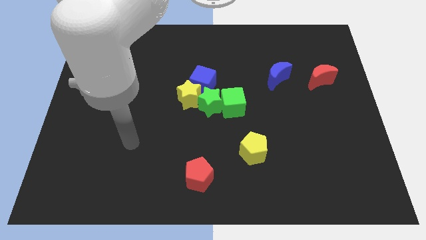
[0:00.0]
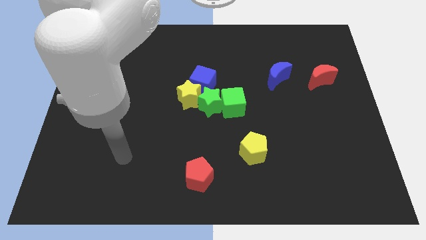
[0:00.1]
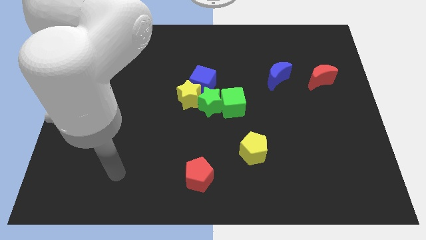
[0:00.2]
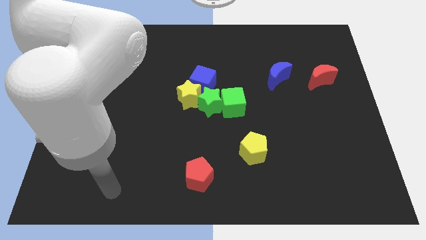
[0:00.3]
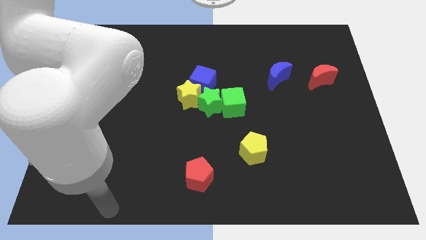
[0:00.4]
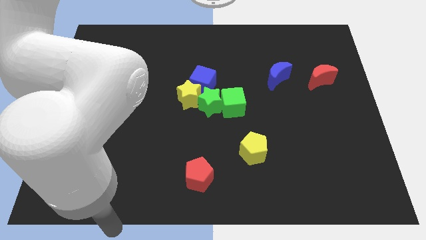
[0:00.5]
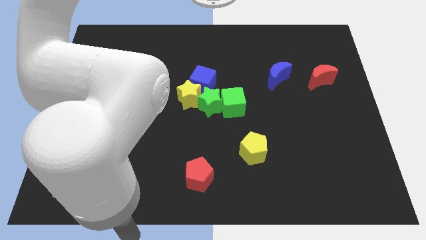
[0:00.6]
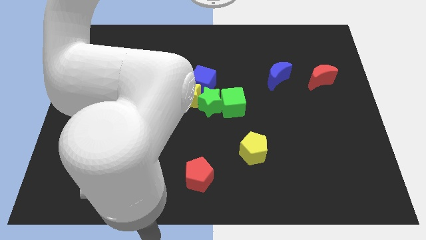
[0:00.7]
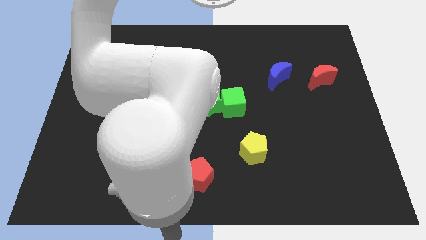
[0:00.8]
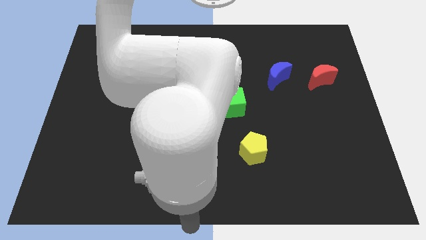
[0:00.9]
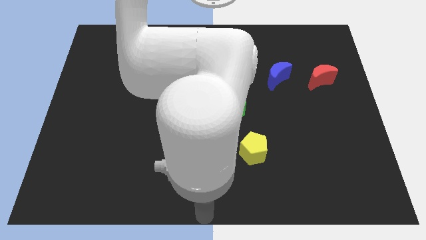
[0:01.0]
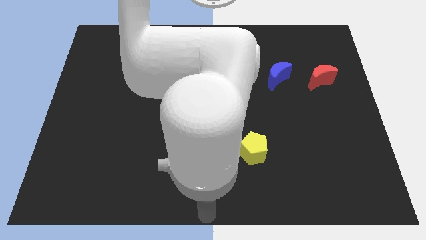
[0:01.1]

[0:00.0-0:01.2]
place your arm at the bottom center of the board

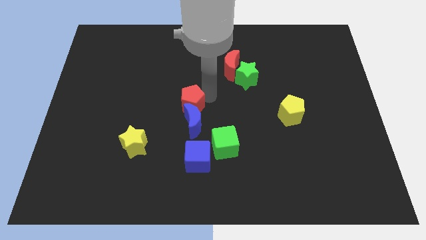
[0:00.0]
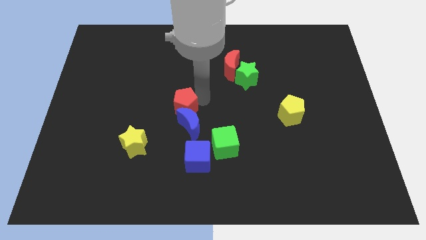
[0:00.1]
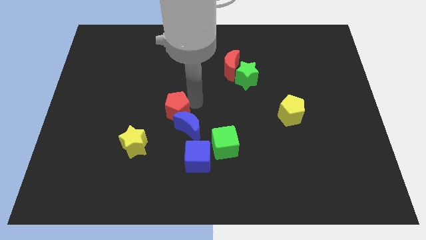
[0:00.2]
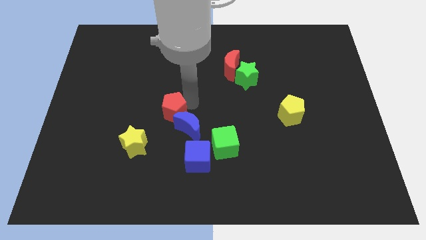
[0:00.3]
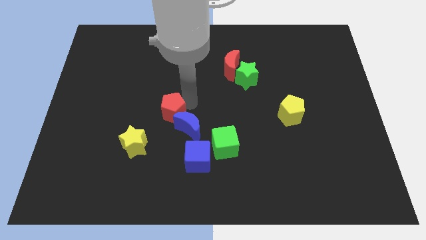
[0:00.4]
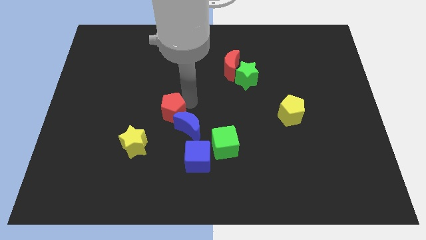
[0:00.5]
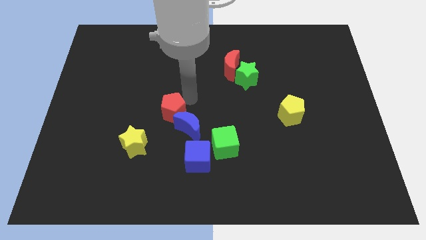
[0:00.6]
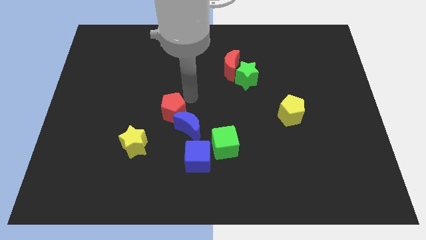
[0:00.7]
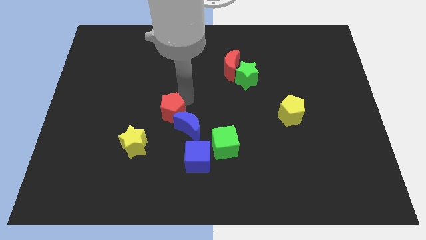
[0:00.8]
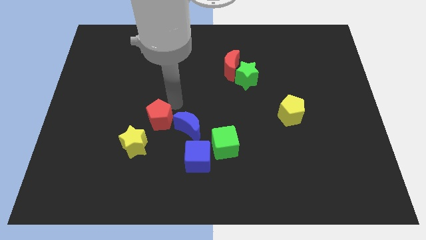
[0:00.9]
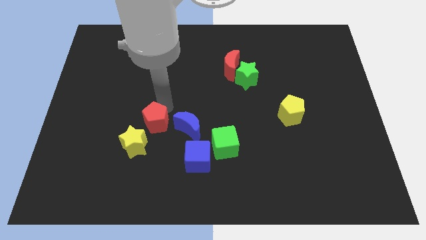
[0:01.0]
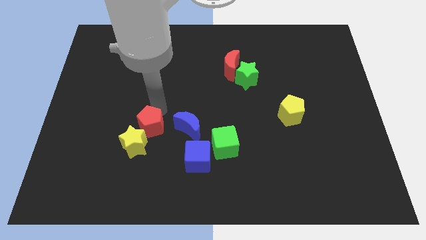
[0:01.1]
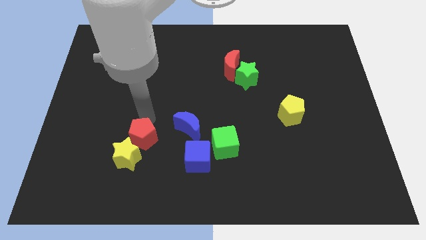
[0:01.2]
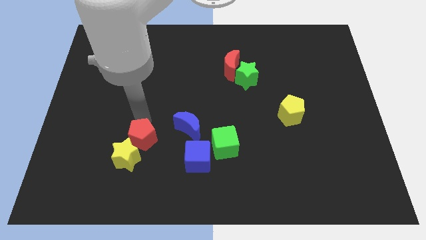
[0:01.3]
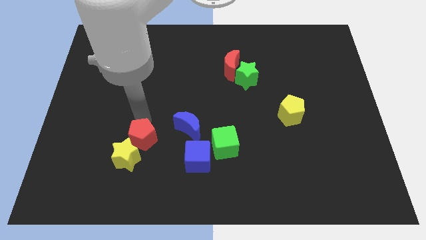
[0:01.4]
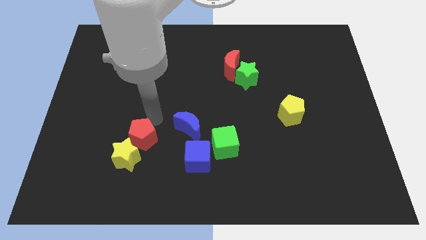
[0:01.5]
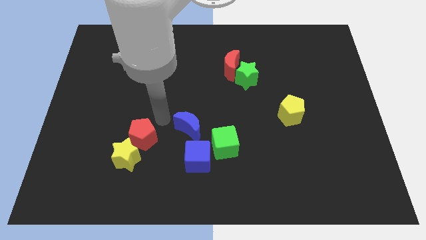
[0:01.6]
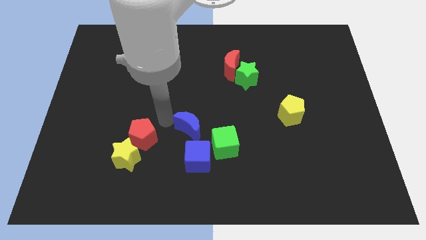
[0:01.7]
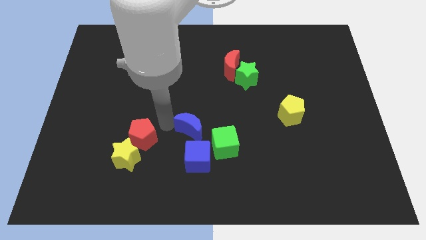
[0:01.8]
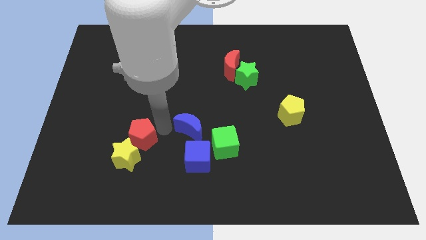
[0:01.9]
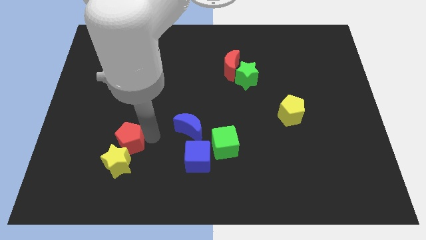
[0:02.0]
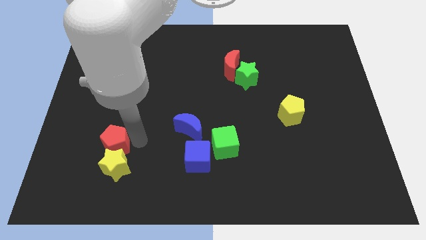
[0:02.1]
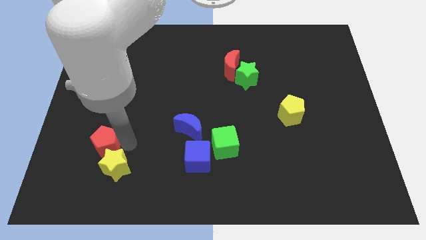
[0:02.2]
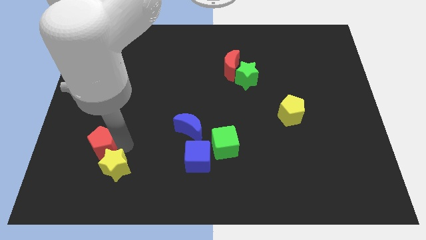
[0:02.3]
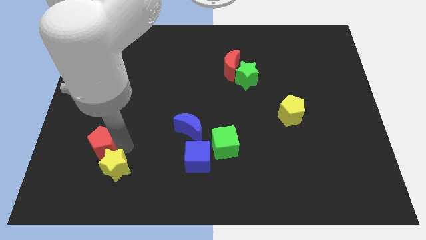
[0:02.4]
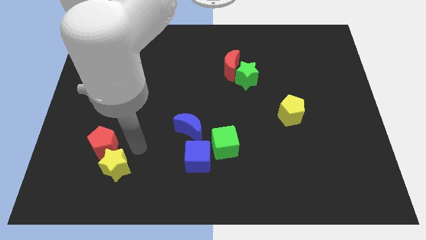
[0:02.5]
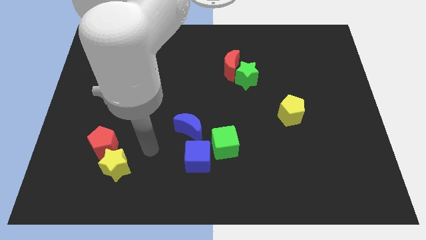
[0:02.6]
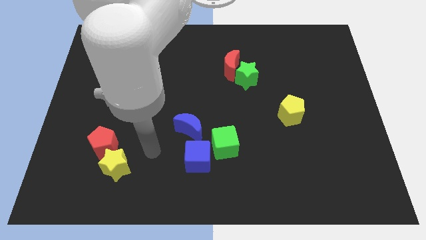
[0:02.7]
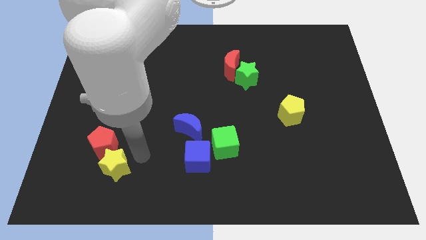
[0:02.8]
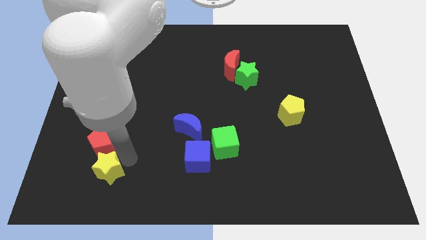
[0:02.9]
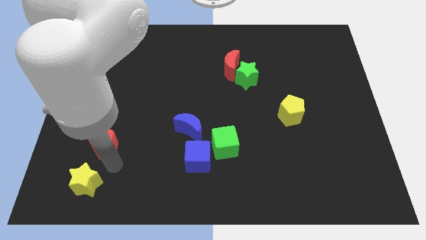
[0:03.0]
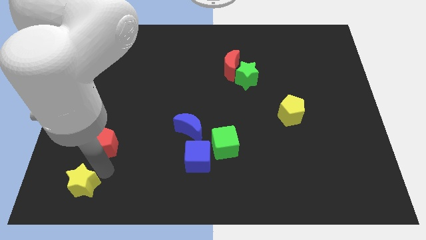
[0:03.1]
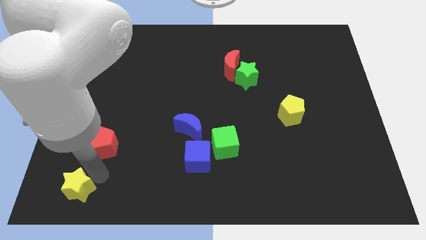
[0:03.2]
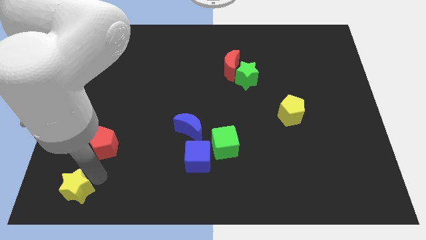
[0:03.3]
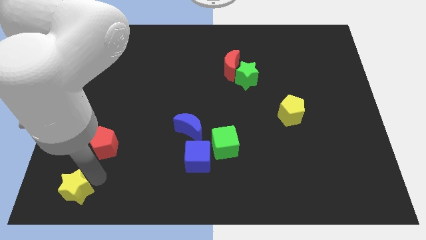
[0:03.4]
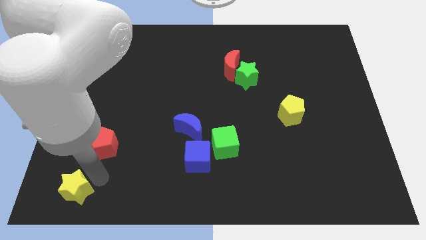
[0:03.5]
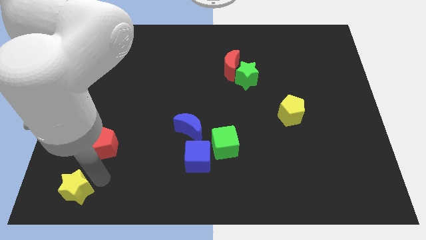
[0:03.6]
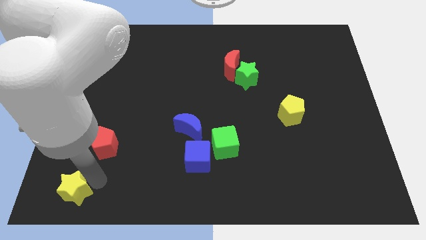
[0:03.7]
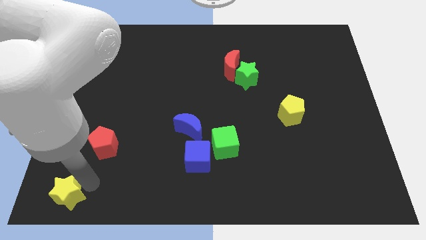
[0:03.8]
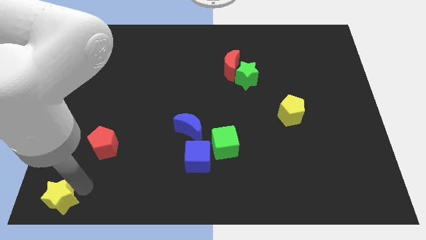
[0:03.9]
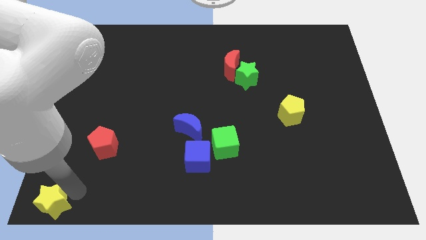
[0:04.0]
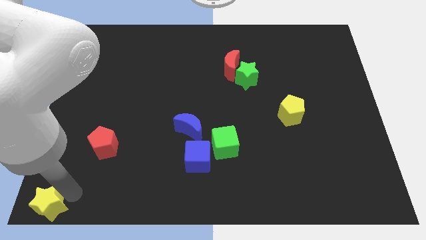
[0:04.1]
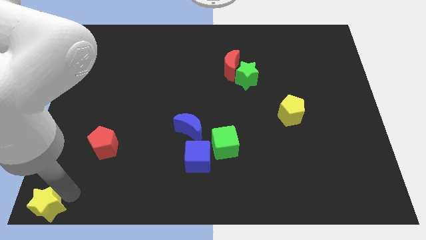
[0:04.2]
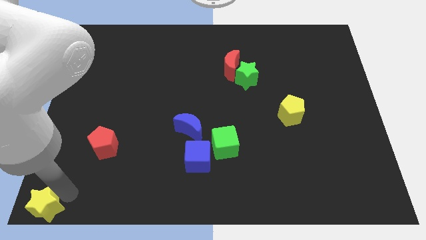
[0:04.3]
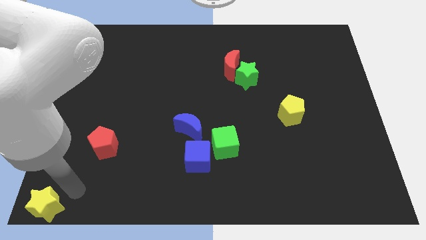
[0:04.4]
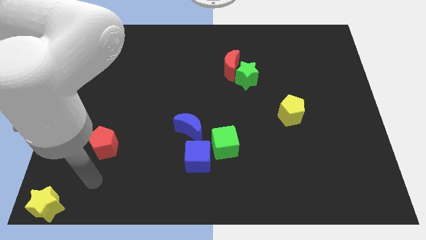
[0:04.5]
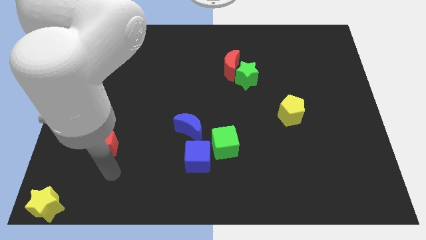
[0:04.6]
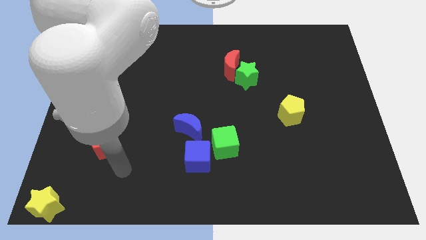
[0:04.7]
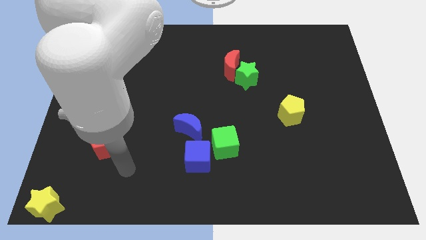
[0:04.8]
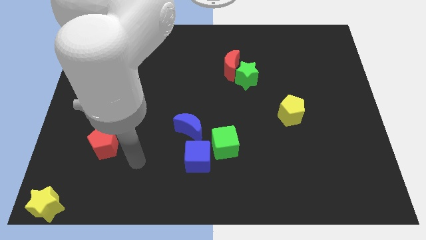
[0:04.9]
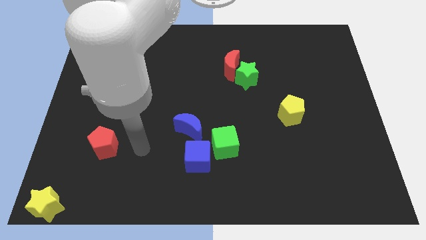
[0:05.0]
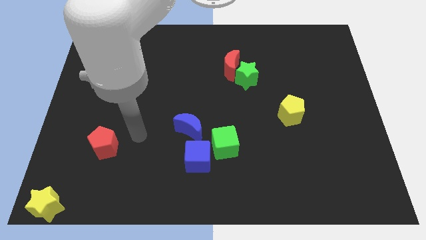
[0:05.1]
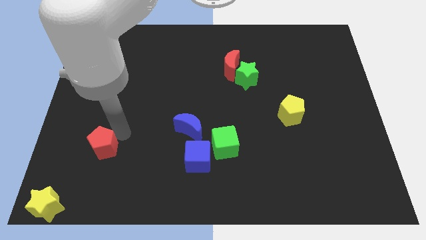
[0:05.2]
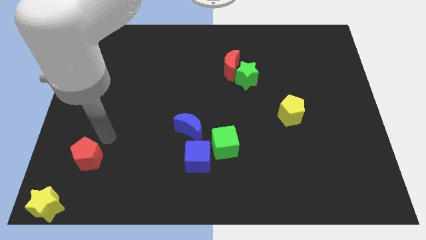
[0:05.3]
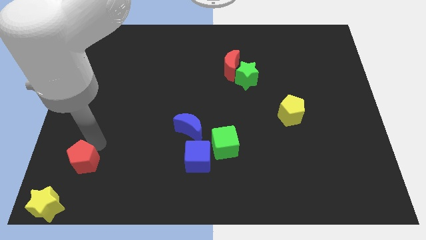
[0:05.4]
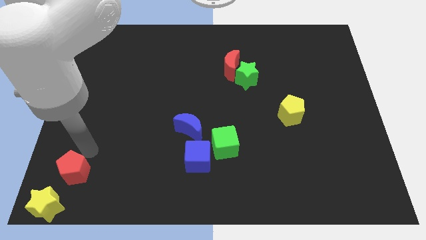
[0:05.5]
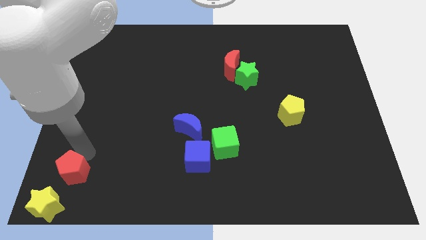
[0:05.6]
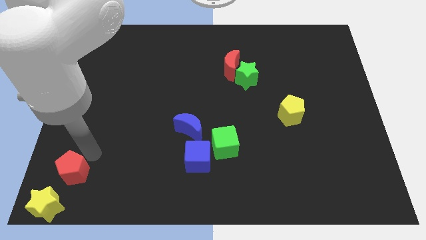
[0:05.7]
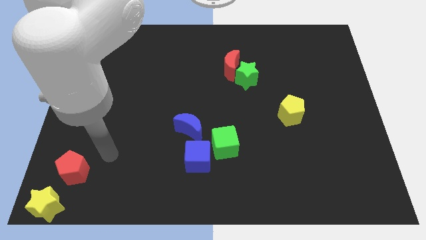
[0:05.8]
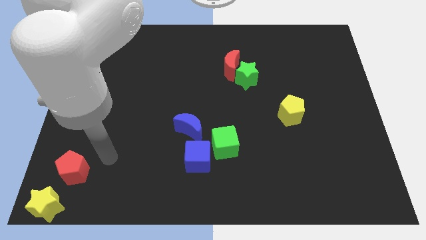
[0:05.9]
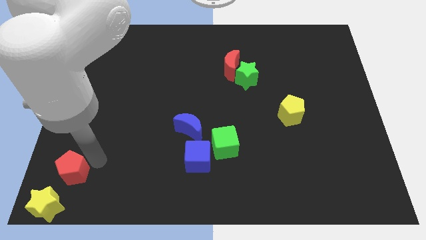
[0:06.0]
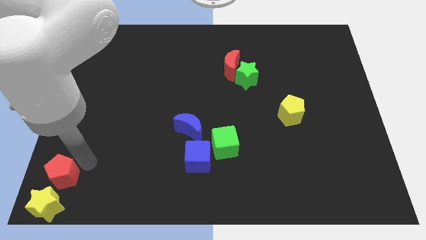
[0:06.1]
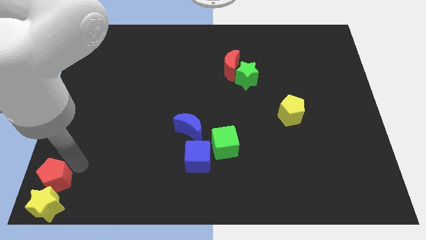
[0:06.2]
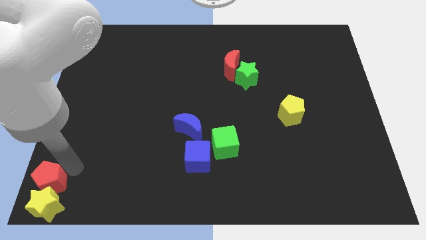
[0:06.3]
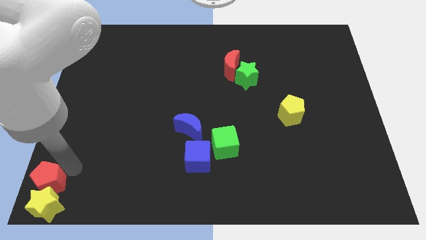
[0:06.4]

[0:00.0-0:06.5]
slide the yellow star snd the red pentagon at the bottom left of the table

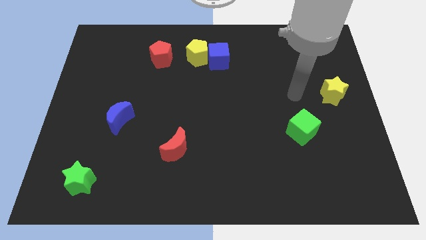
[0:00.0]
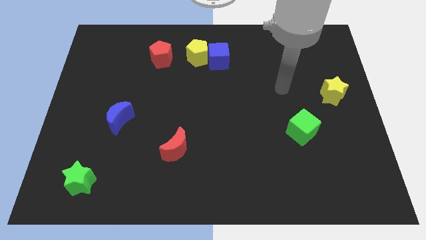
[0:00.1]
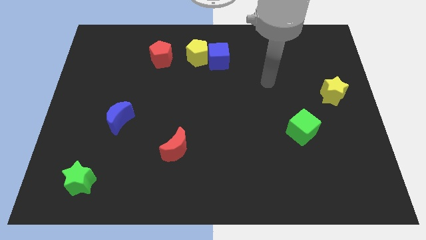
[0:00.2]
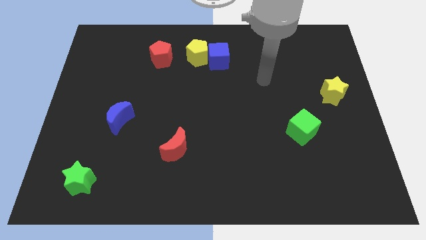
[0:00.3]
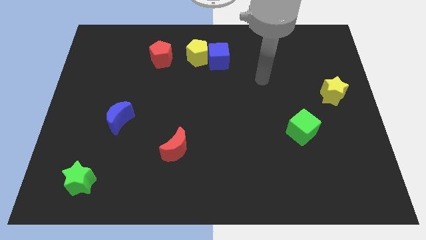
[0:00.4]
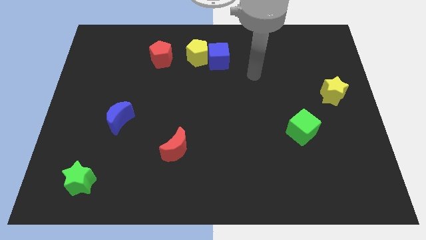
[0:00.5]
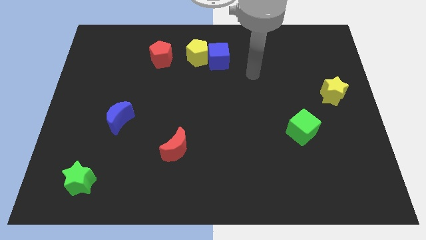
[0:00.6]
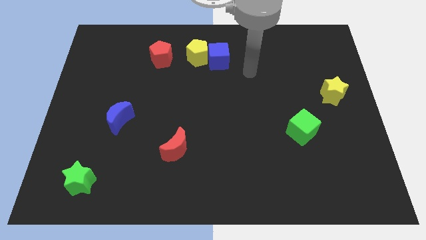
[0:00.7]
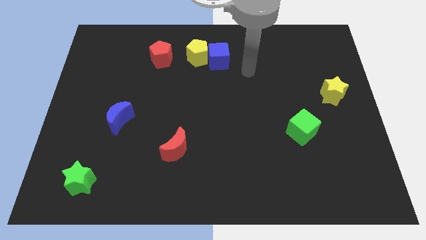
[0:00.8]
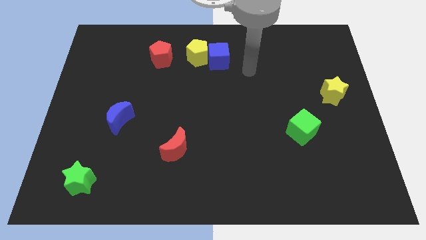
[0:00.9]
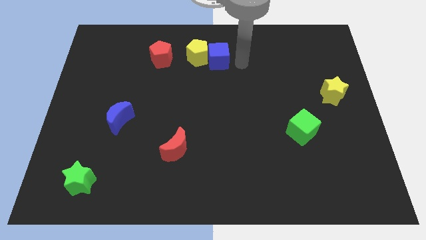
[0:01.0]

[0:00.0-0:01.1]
move your hand to the right of blue cube

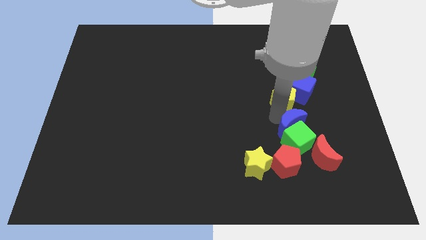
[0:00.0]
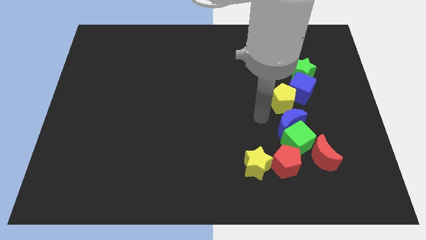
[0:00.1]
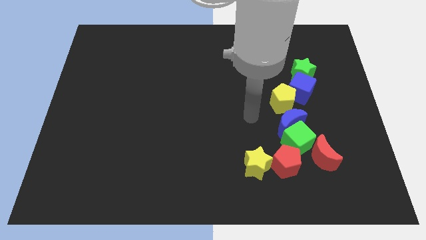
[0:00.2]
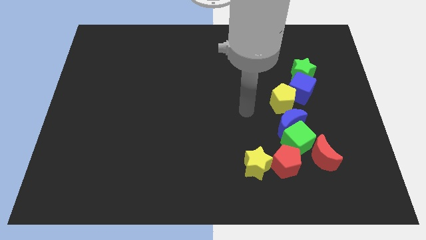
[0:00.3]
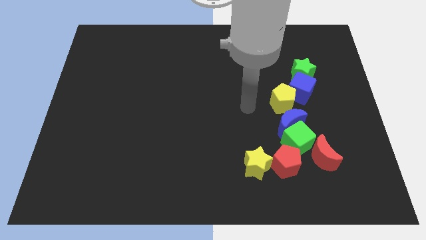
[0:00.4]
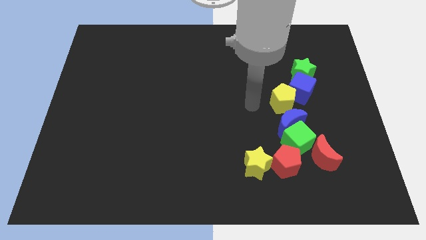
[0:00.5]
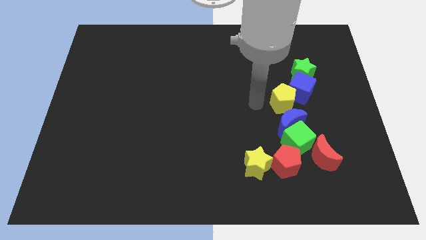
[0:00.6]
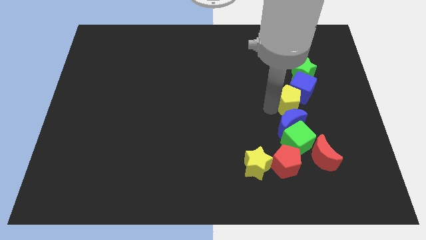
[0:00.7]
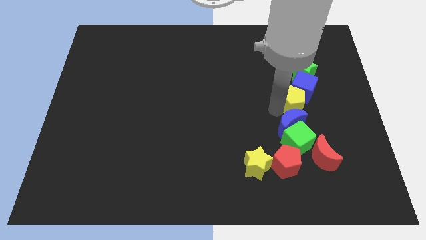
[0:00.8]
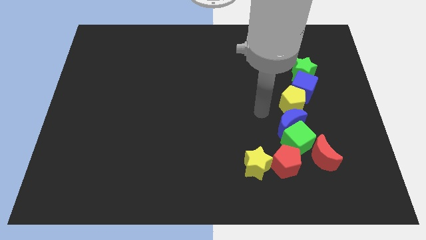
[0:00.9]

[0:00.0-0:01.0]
move the yellow pentagon to the top of the blue crescent
